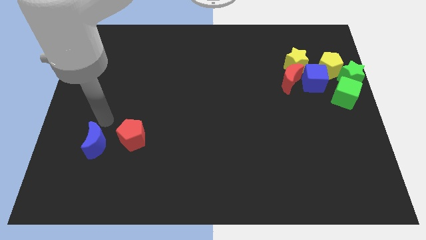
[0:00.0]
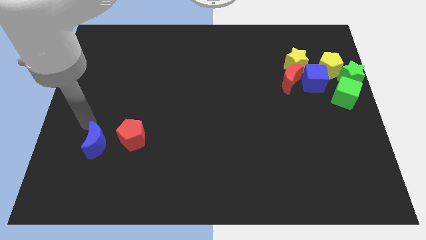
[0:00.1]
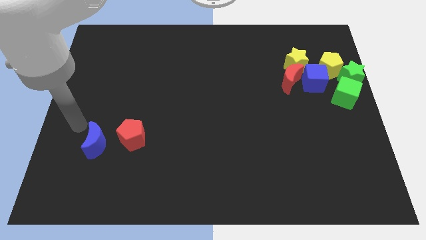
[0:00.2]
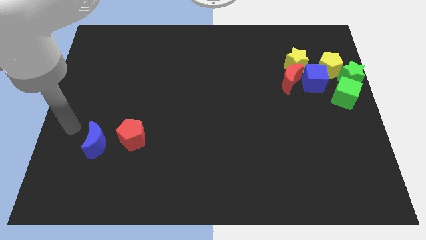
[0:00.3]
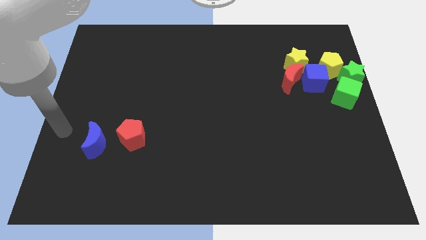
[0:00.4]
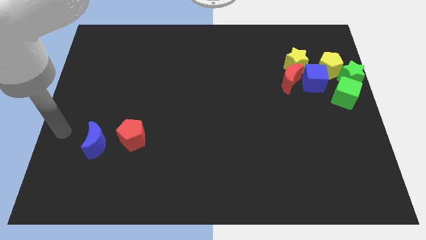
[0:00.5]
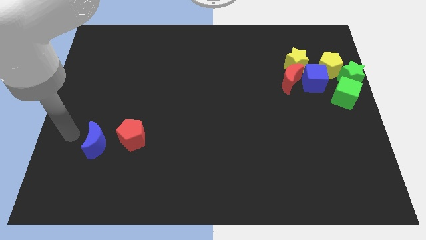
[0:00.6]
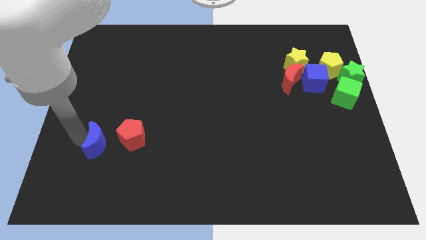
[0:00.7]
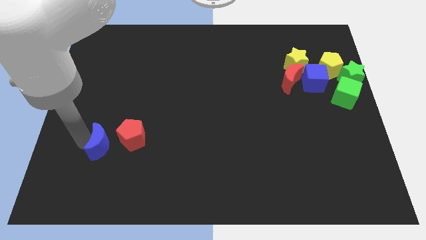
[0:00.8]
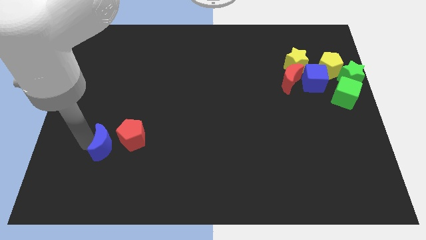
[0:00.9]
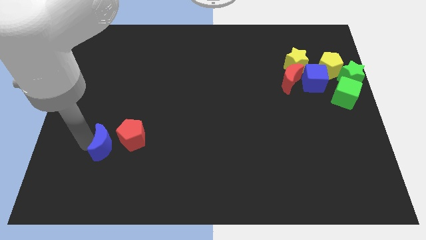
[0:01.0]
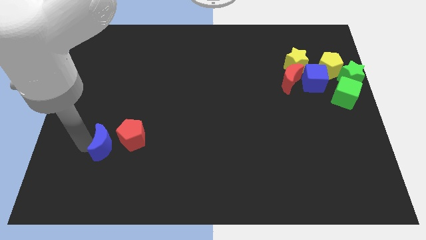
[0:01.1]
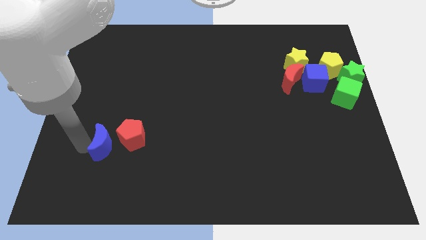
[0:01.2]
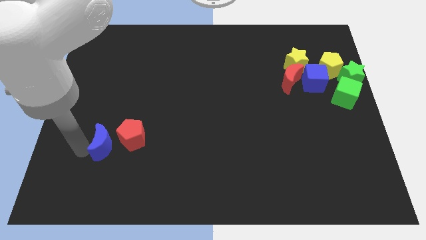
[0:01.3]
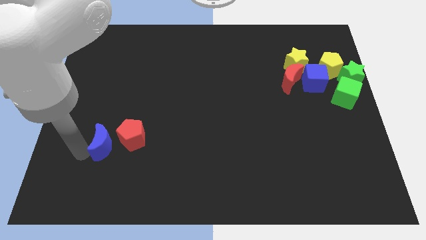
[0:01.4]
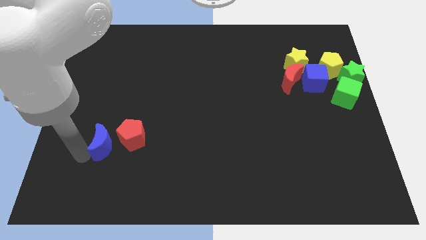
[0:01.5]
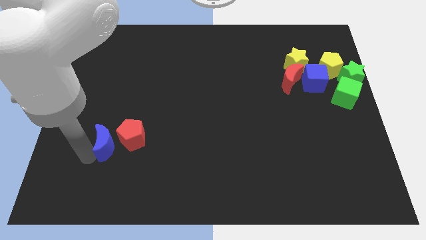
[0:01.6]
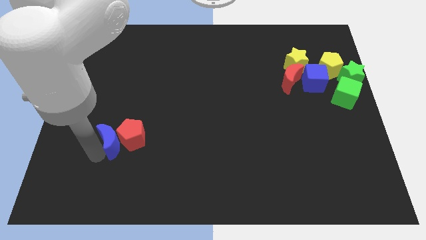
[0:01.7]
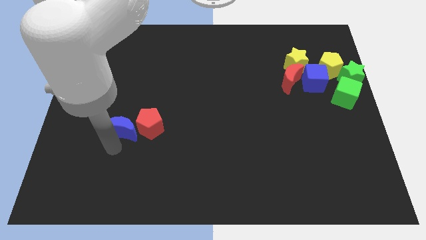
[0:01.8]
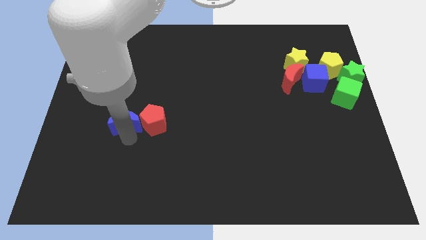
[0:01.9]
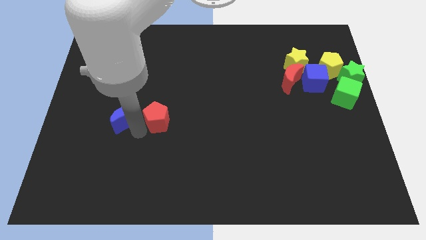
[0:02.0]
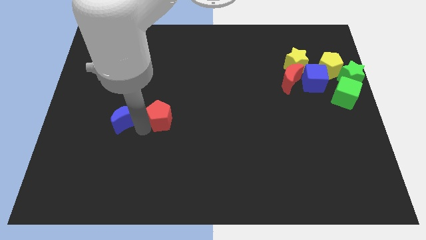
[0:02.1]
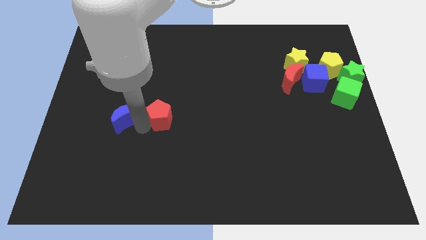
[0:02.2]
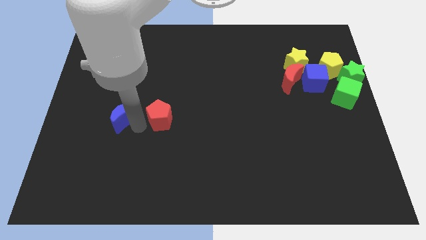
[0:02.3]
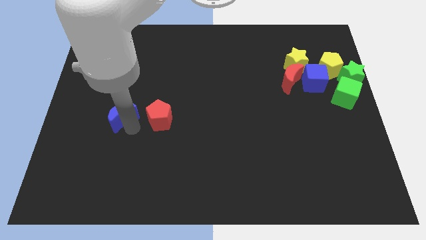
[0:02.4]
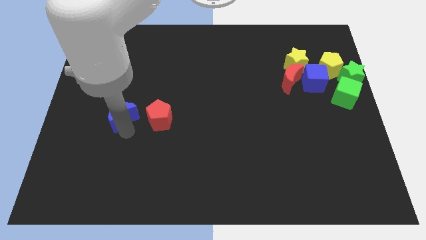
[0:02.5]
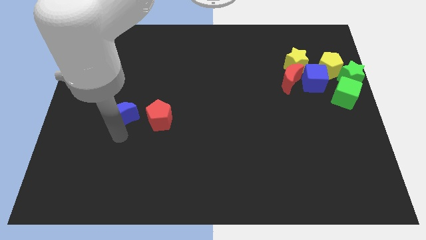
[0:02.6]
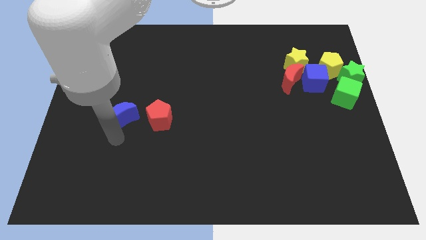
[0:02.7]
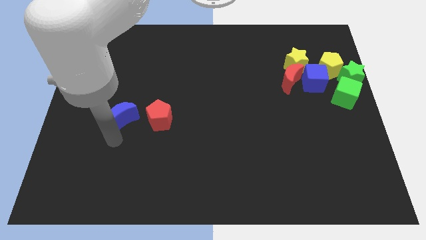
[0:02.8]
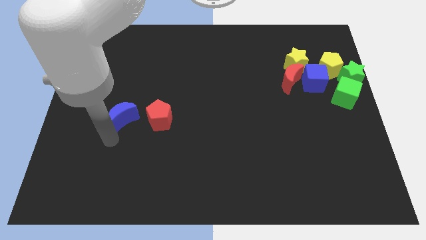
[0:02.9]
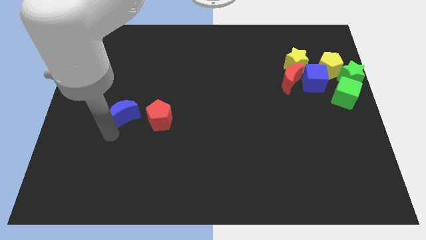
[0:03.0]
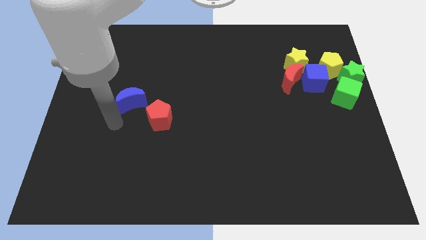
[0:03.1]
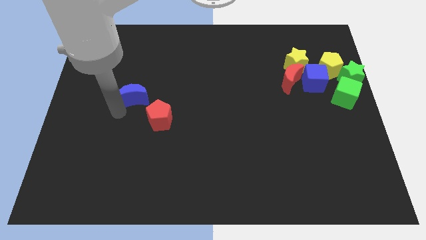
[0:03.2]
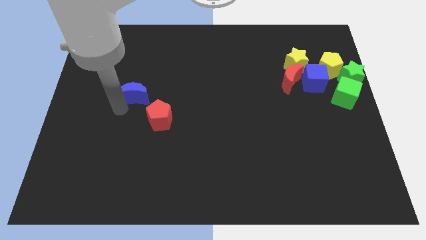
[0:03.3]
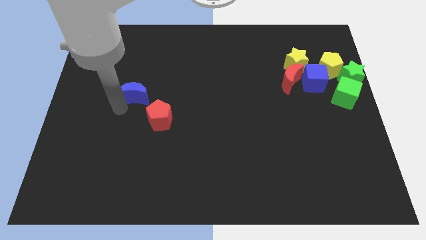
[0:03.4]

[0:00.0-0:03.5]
push the blue crescent into the red pentagon

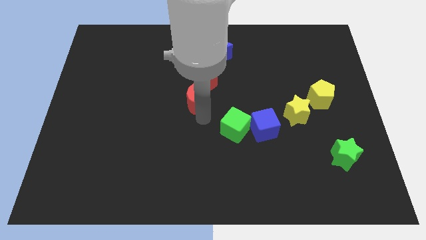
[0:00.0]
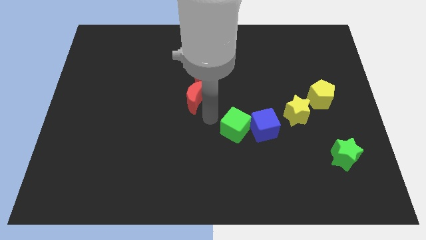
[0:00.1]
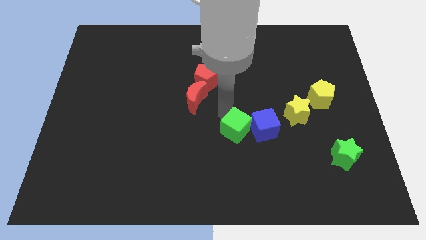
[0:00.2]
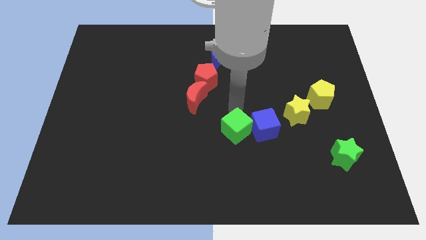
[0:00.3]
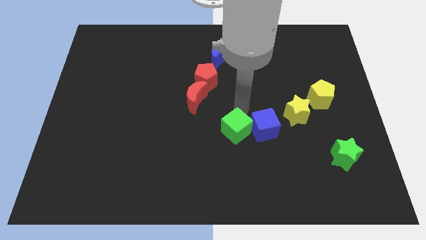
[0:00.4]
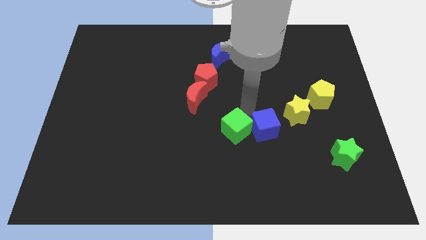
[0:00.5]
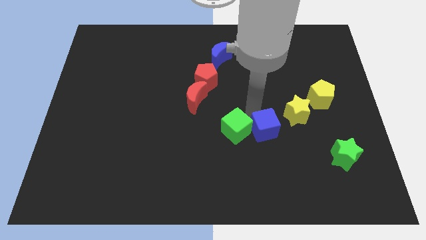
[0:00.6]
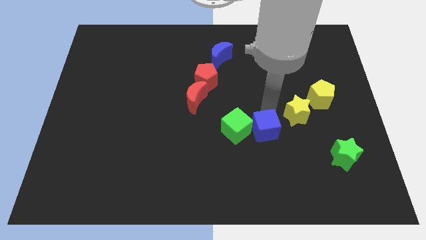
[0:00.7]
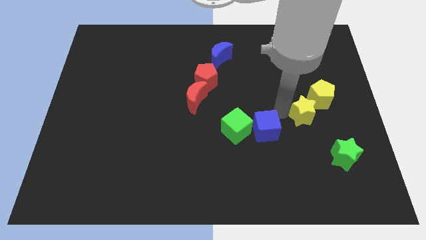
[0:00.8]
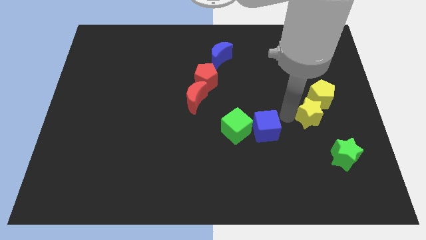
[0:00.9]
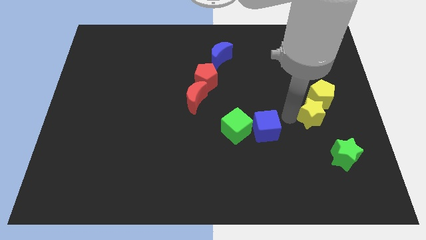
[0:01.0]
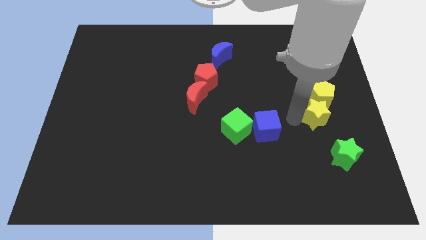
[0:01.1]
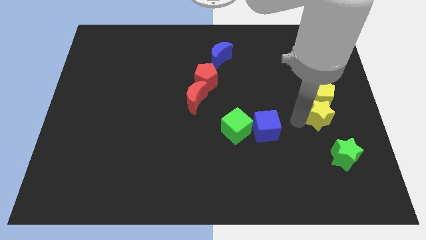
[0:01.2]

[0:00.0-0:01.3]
put the yellow star at the bottom of the yellow pentagon

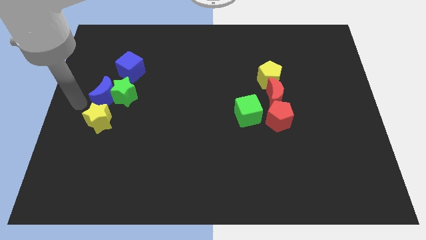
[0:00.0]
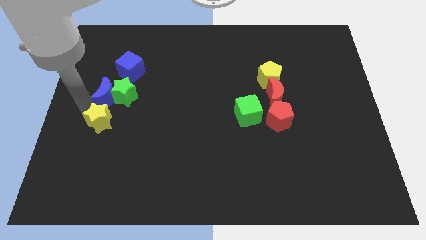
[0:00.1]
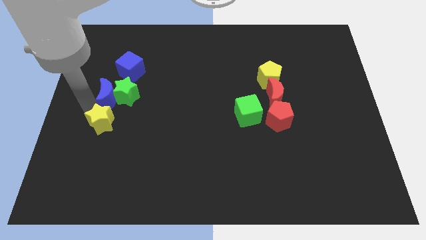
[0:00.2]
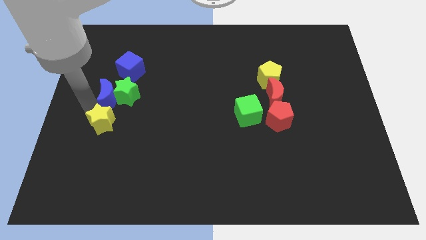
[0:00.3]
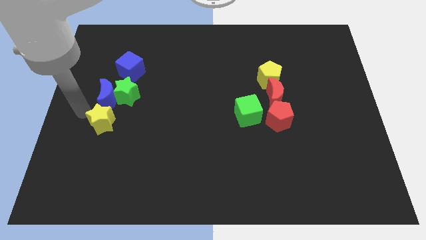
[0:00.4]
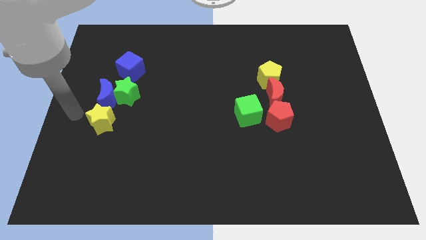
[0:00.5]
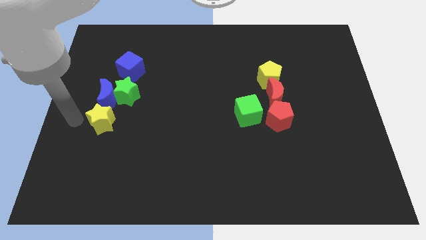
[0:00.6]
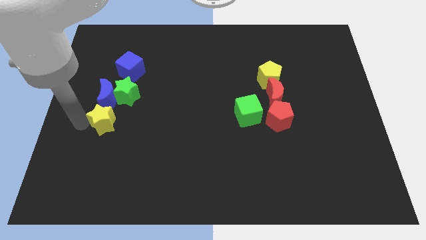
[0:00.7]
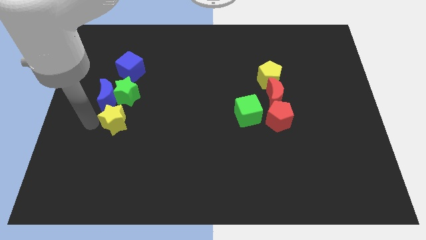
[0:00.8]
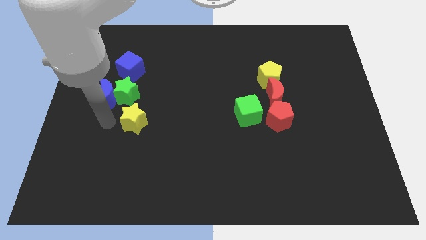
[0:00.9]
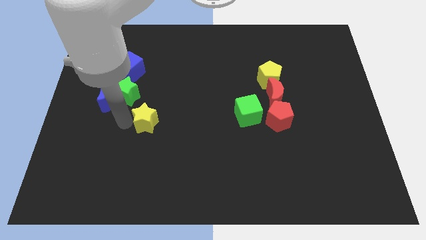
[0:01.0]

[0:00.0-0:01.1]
separate yellow star from blue moon

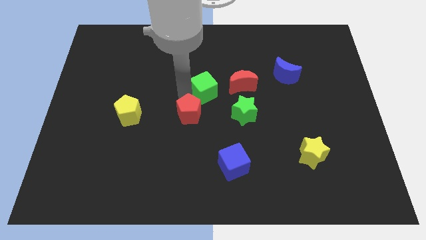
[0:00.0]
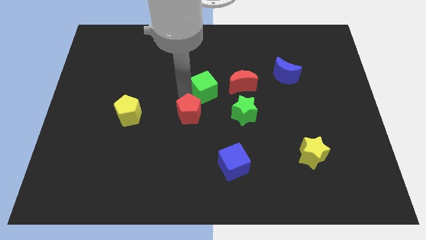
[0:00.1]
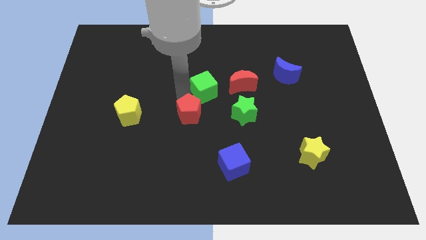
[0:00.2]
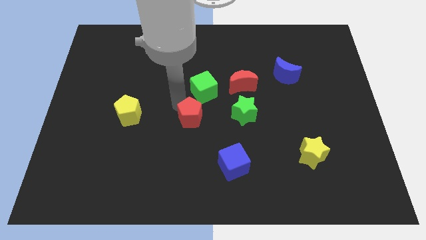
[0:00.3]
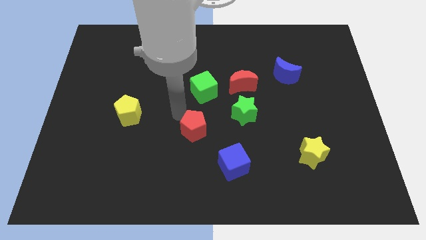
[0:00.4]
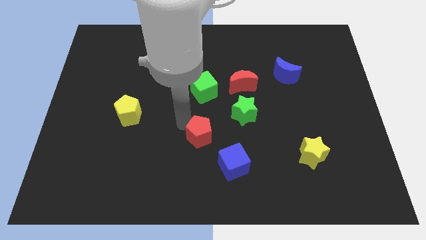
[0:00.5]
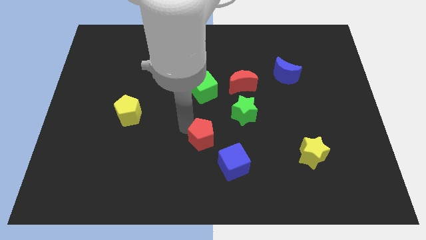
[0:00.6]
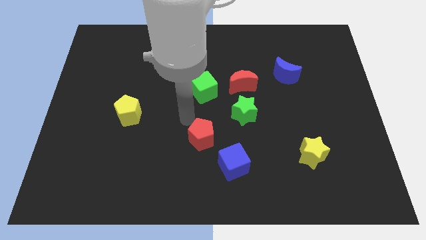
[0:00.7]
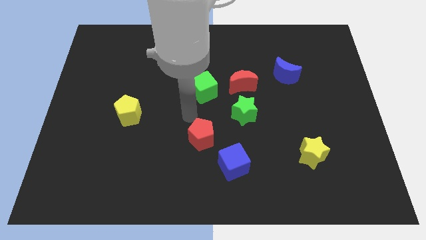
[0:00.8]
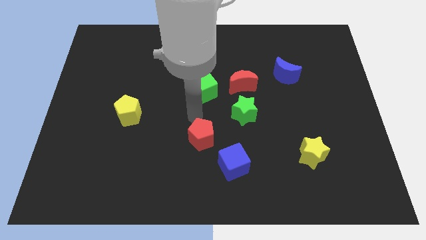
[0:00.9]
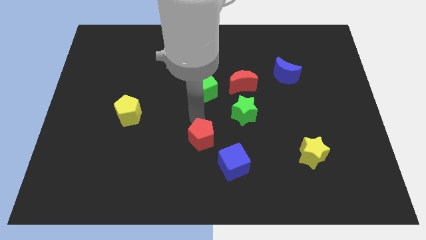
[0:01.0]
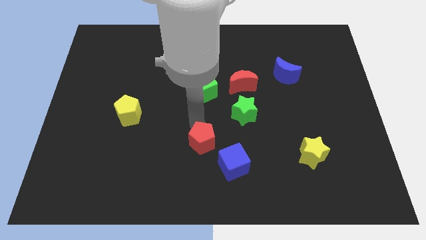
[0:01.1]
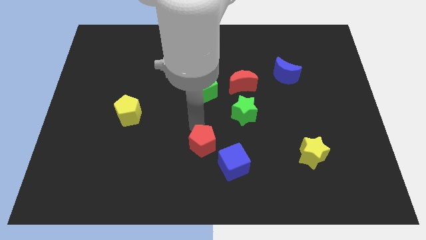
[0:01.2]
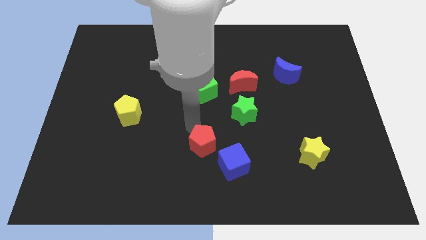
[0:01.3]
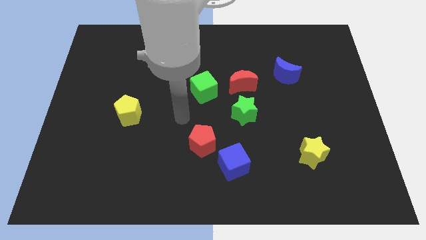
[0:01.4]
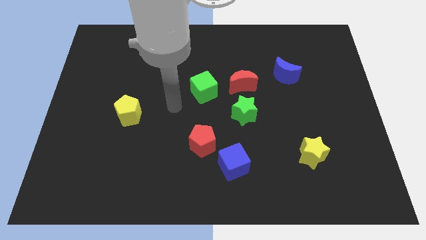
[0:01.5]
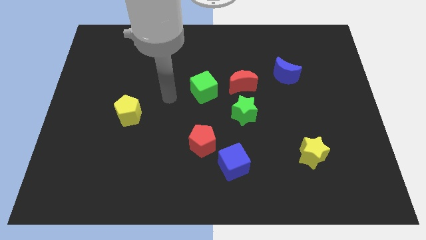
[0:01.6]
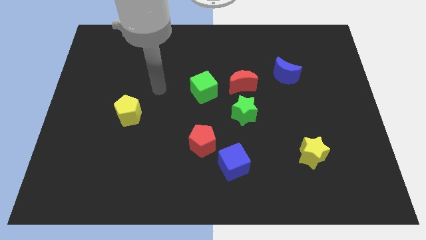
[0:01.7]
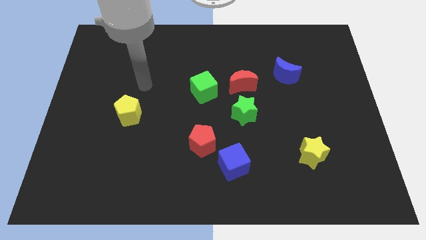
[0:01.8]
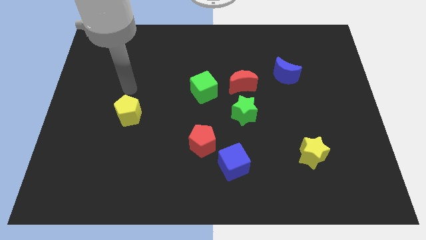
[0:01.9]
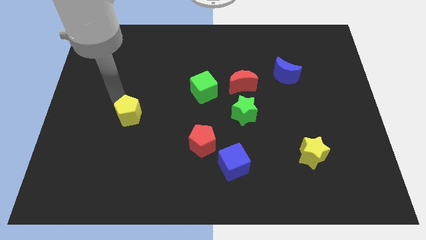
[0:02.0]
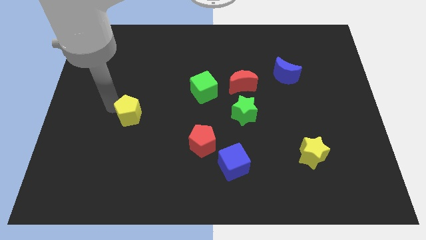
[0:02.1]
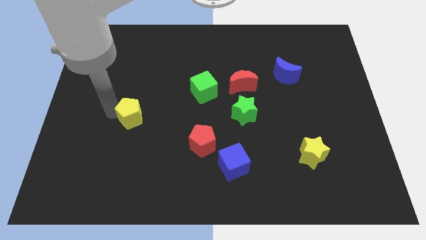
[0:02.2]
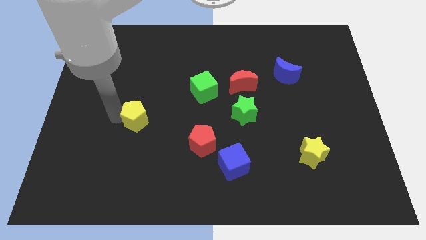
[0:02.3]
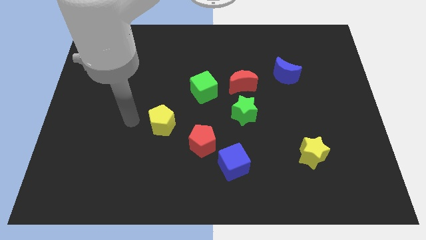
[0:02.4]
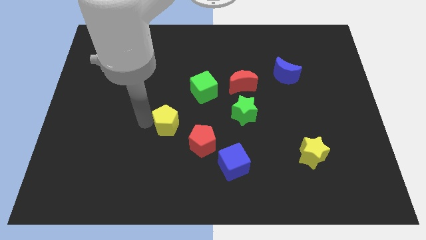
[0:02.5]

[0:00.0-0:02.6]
place the yellow pentagon diagonally bottom left to the green cube

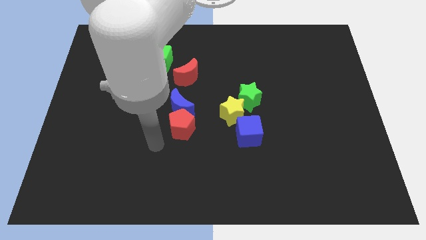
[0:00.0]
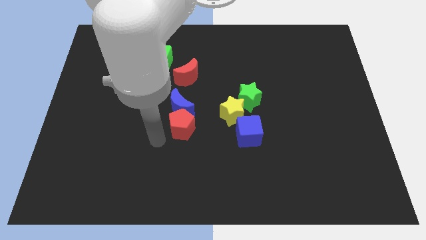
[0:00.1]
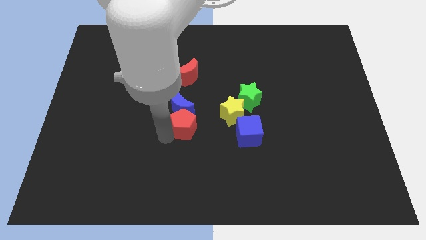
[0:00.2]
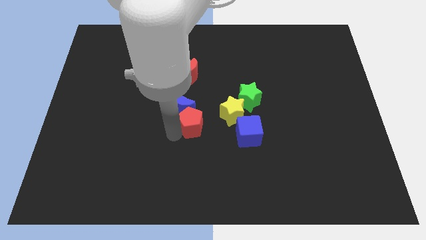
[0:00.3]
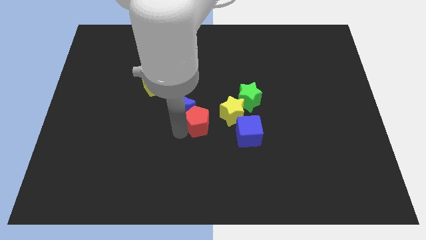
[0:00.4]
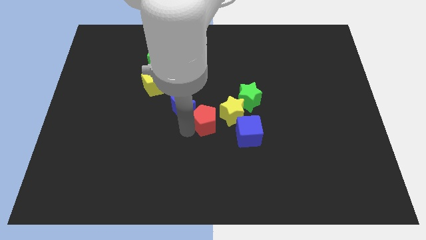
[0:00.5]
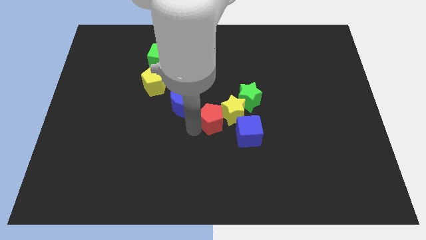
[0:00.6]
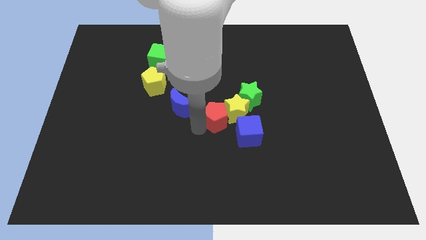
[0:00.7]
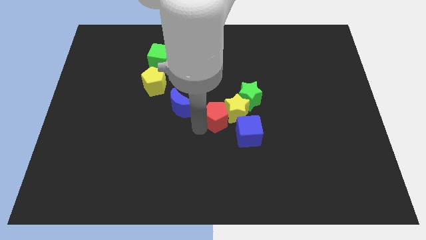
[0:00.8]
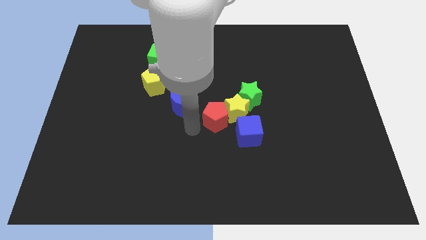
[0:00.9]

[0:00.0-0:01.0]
push the red pentagon into the yellow star diagonally from bottom left
